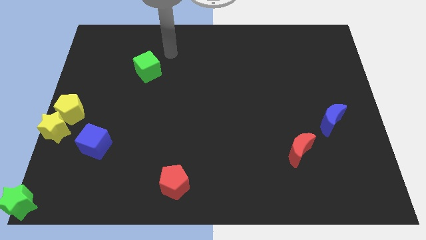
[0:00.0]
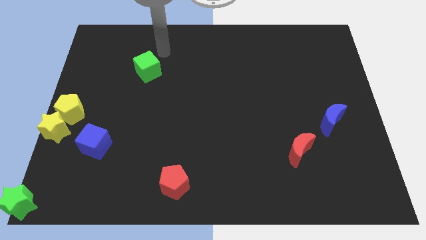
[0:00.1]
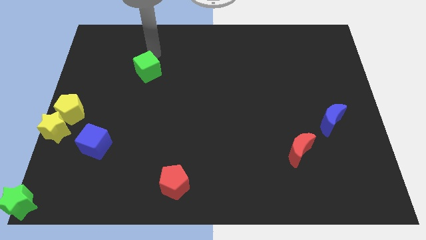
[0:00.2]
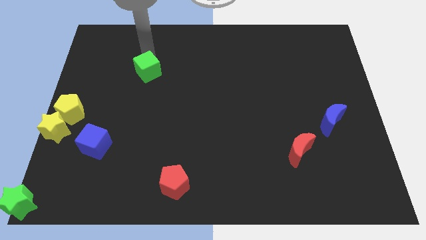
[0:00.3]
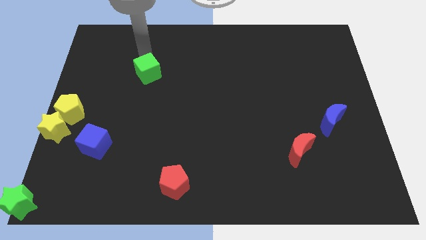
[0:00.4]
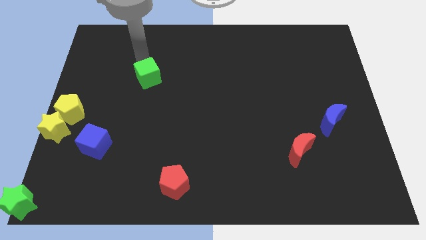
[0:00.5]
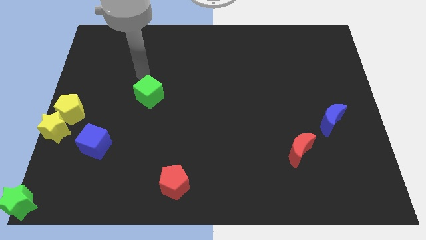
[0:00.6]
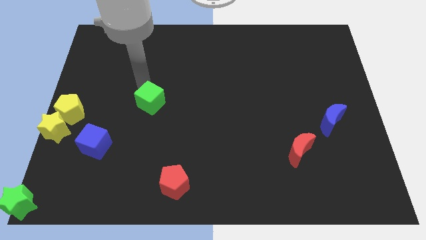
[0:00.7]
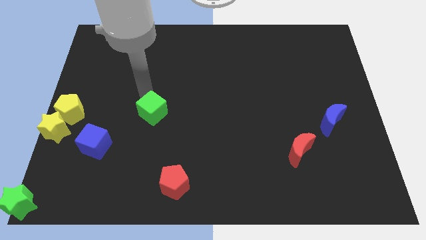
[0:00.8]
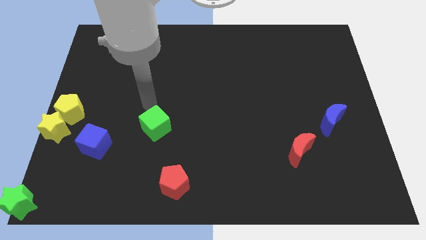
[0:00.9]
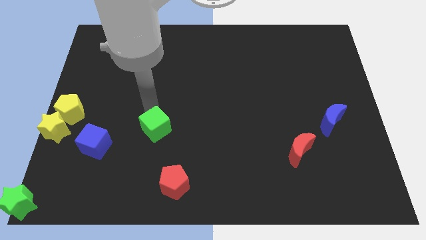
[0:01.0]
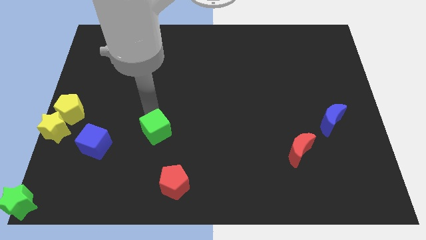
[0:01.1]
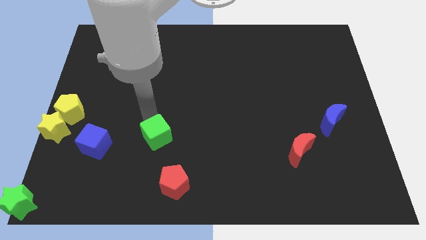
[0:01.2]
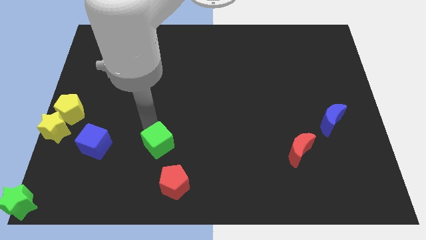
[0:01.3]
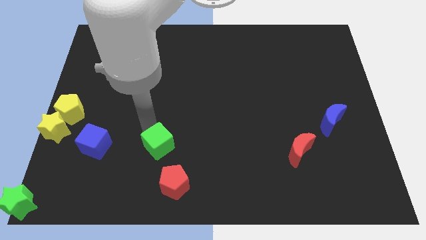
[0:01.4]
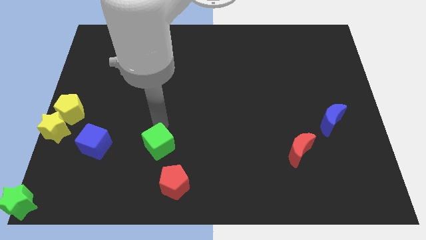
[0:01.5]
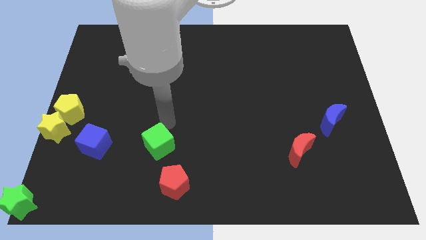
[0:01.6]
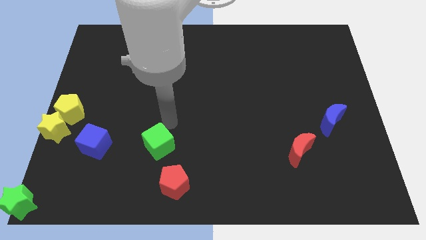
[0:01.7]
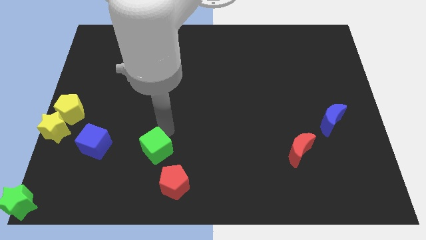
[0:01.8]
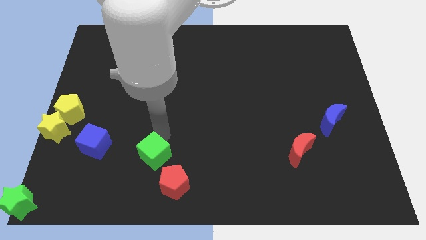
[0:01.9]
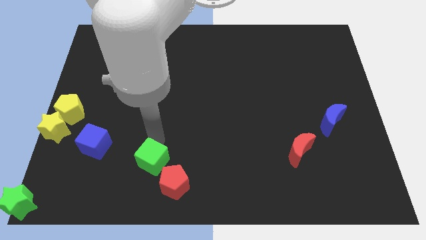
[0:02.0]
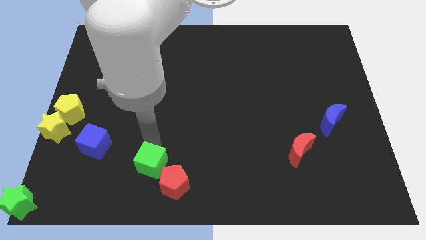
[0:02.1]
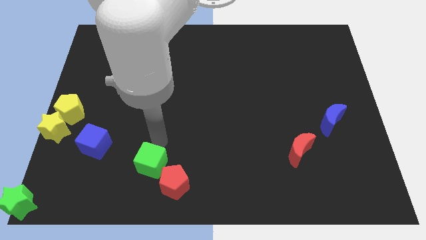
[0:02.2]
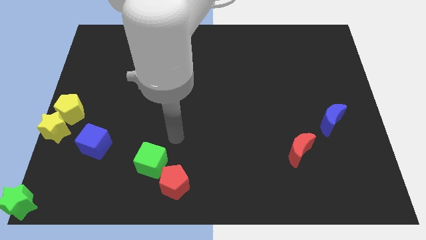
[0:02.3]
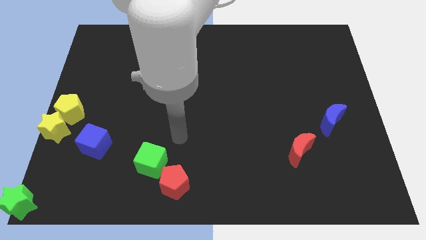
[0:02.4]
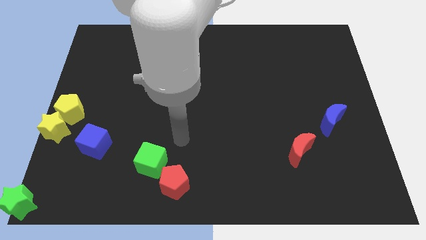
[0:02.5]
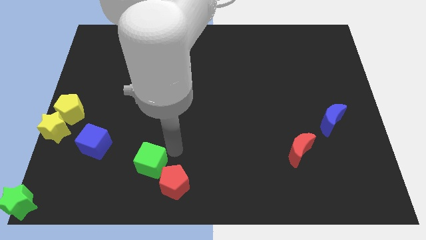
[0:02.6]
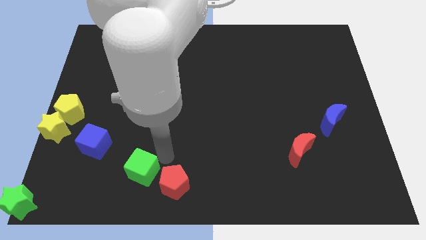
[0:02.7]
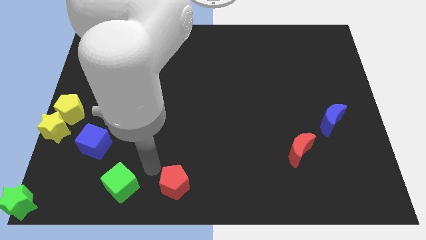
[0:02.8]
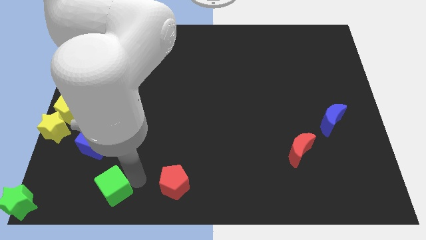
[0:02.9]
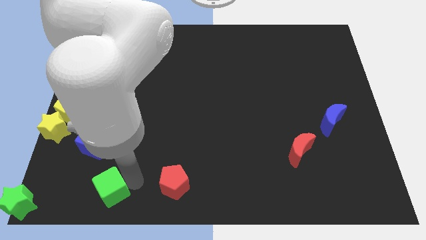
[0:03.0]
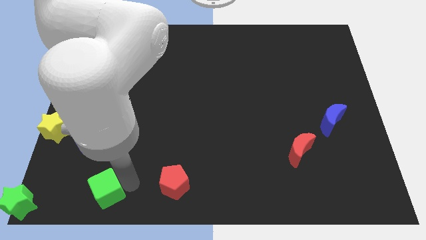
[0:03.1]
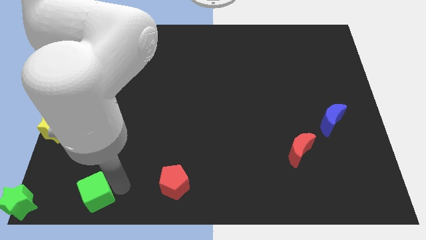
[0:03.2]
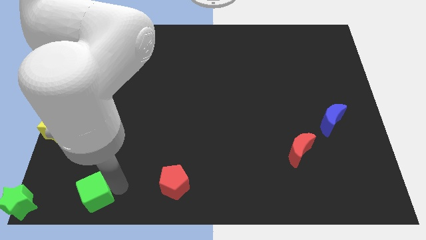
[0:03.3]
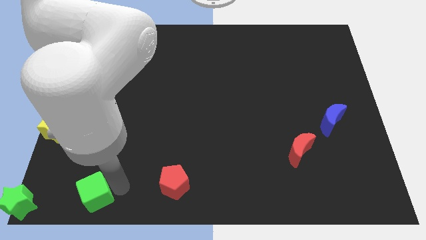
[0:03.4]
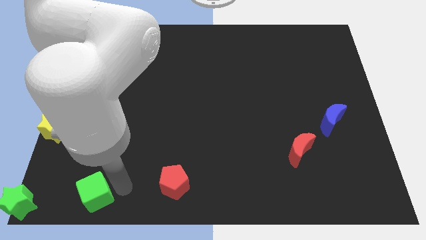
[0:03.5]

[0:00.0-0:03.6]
push the green cube to the right side of the green star

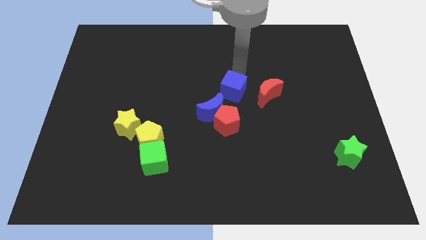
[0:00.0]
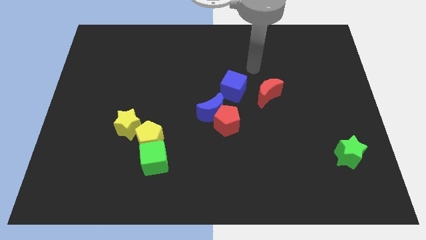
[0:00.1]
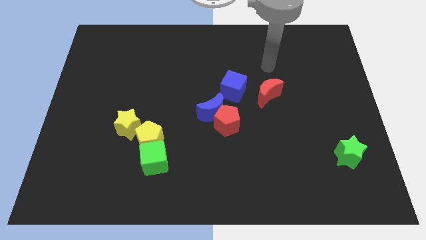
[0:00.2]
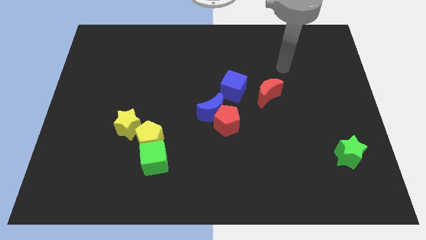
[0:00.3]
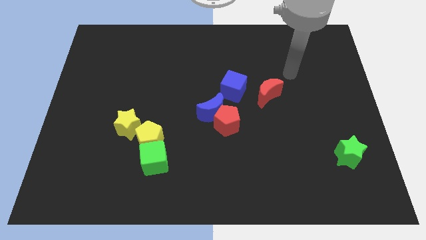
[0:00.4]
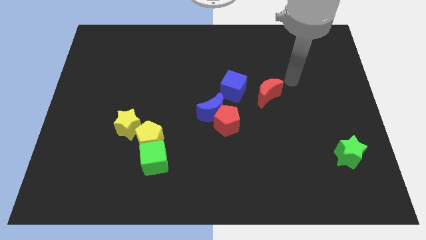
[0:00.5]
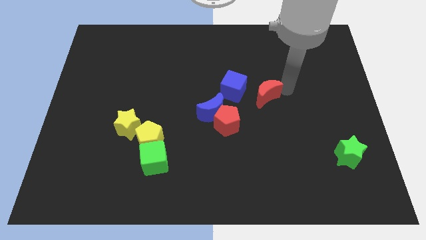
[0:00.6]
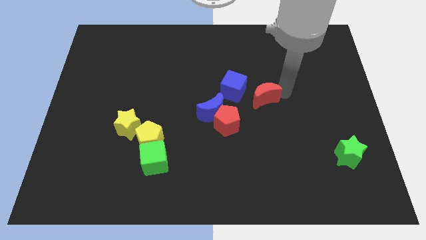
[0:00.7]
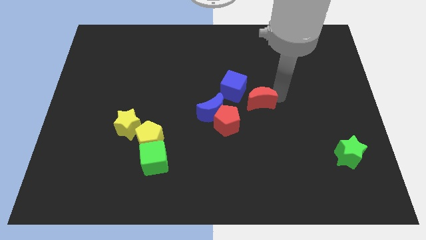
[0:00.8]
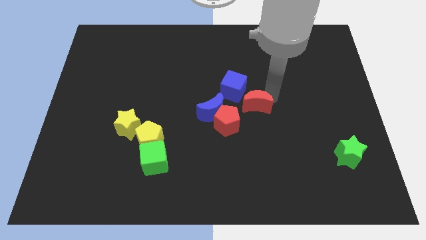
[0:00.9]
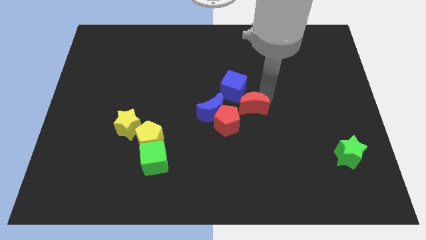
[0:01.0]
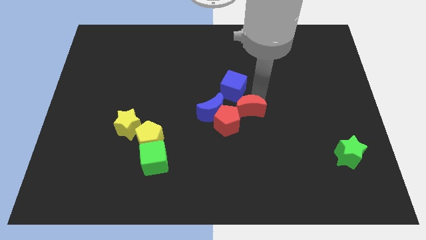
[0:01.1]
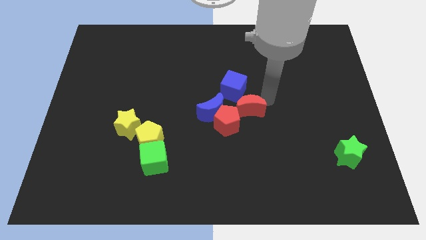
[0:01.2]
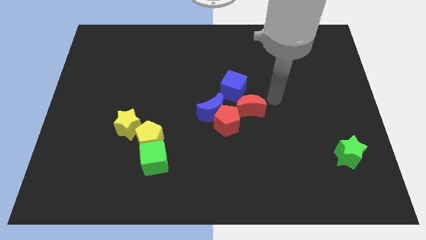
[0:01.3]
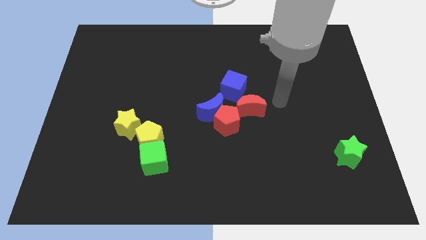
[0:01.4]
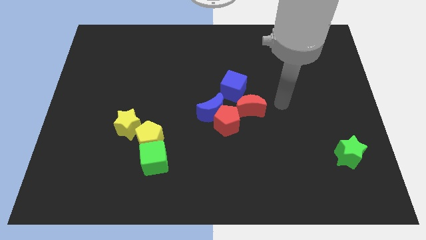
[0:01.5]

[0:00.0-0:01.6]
move the red crescent to the bottom of the blue cube

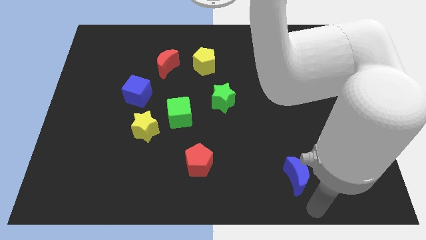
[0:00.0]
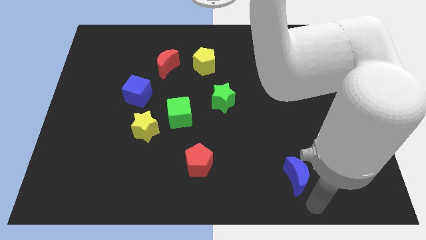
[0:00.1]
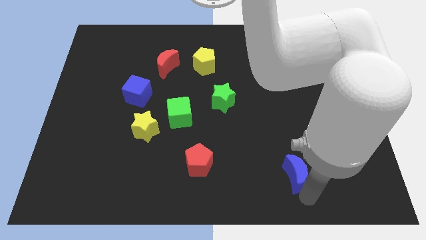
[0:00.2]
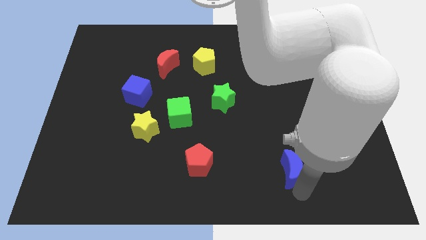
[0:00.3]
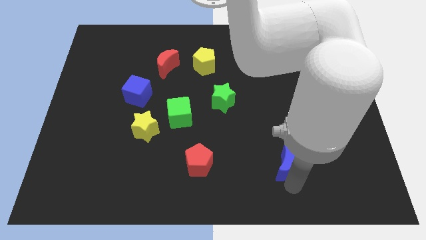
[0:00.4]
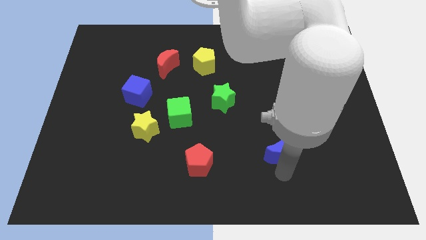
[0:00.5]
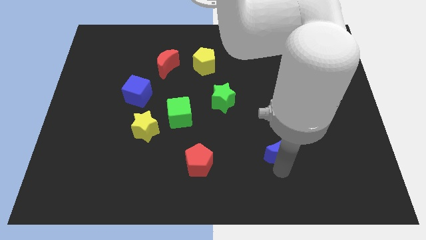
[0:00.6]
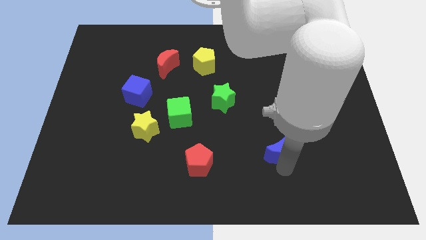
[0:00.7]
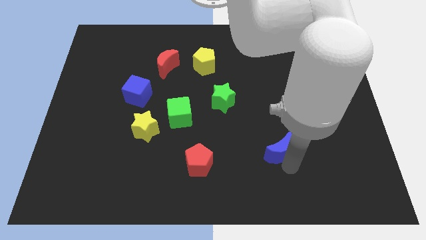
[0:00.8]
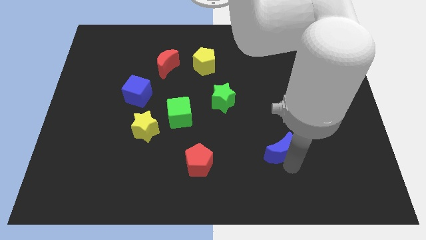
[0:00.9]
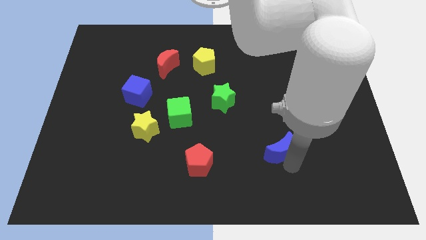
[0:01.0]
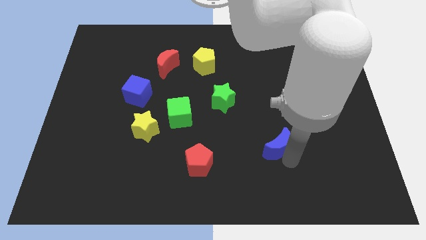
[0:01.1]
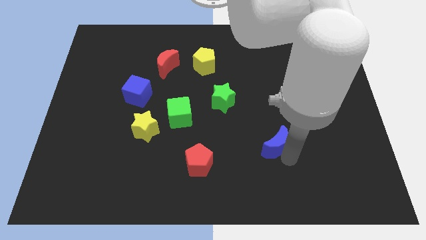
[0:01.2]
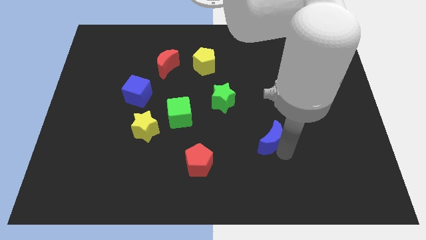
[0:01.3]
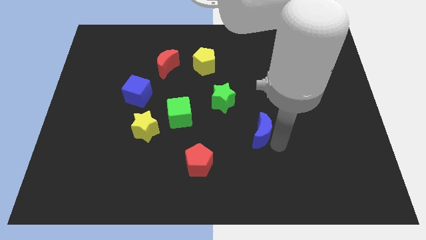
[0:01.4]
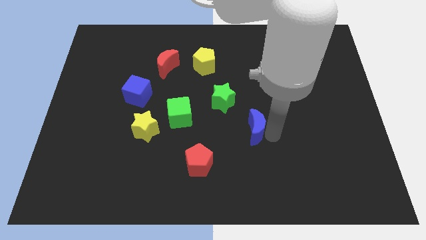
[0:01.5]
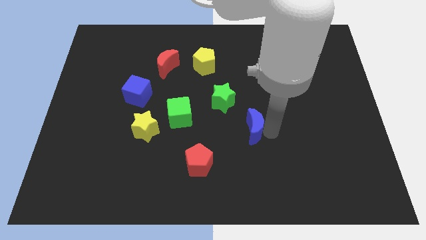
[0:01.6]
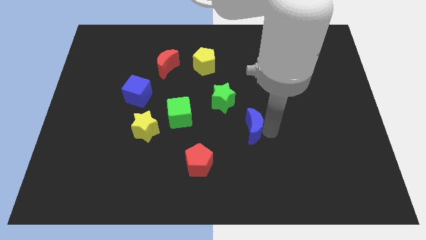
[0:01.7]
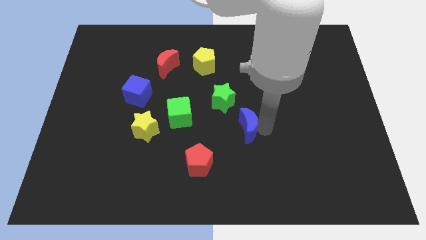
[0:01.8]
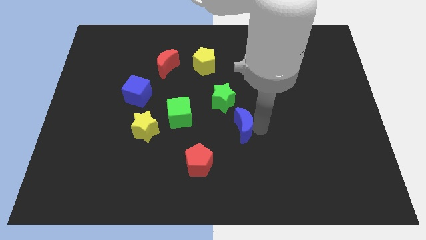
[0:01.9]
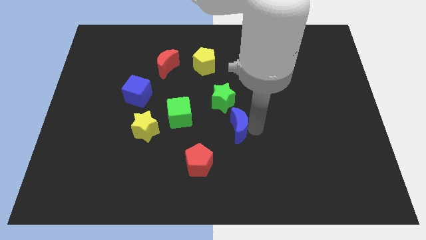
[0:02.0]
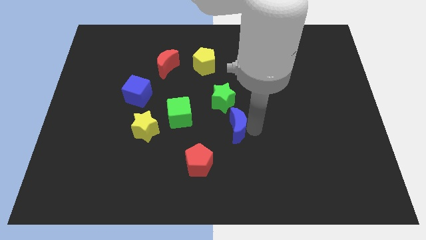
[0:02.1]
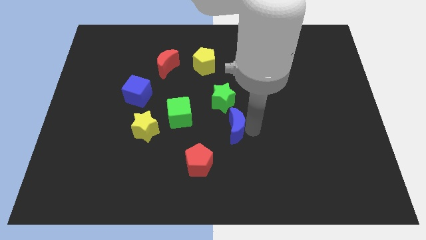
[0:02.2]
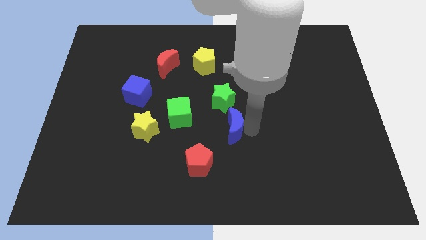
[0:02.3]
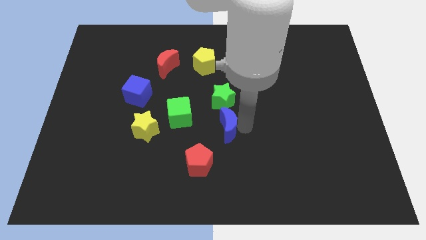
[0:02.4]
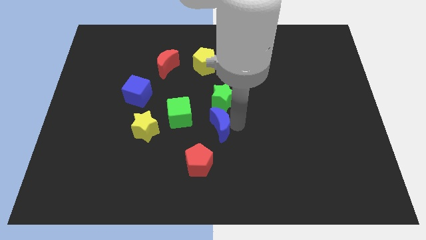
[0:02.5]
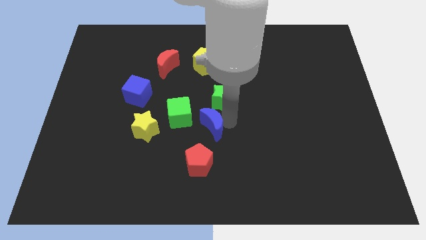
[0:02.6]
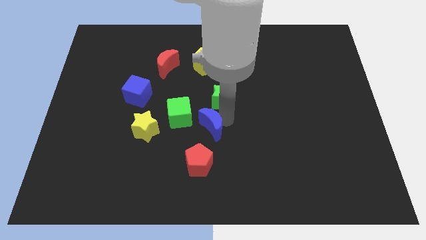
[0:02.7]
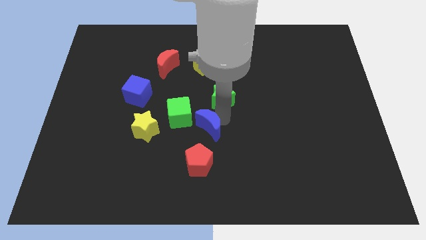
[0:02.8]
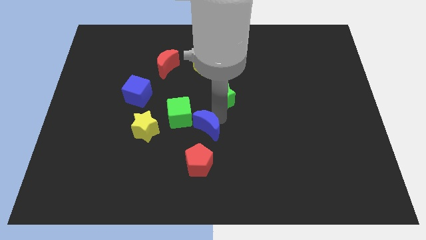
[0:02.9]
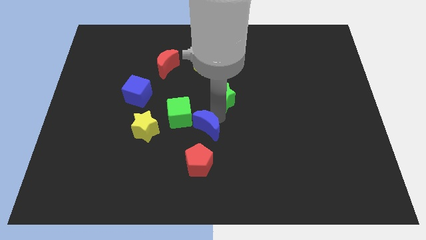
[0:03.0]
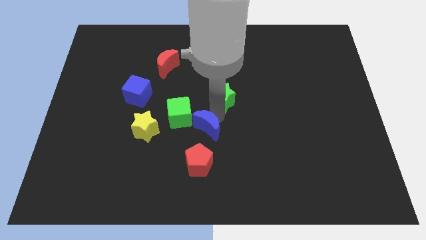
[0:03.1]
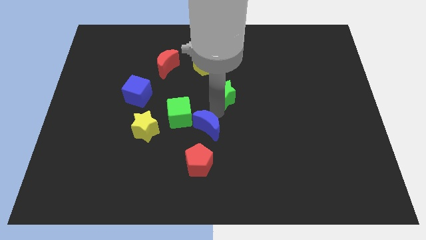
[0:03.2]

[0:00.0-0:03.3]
push blue moon to the bottom right of the green cube

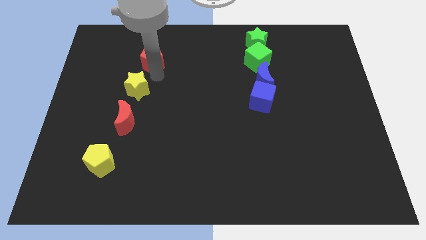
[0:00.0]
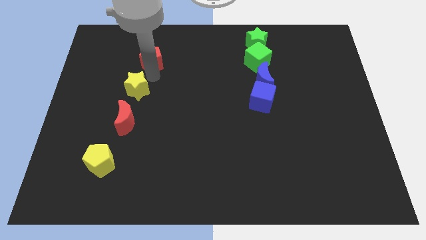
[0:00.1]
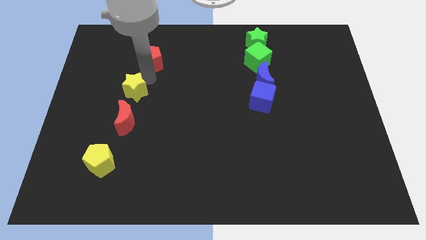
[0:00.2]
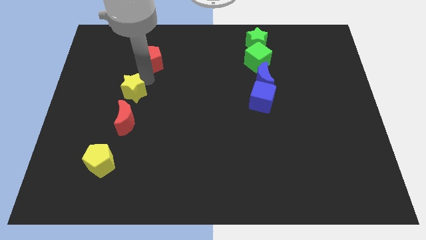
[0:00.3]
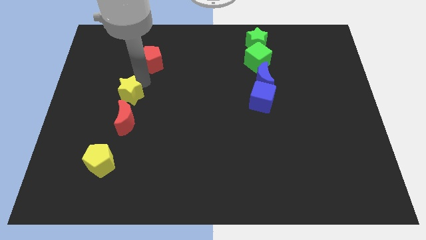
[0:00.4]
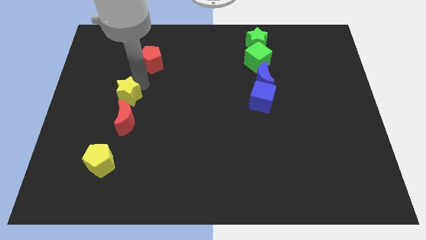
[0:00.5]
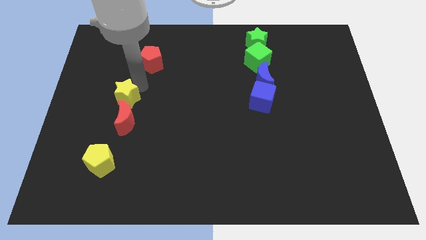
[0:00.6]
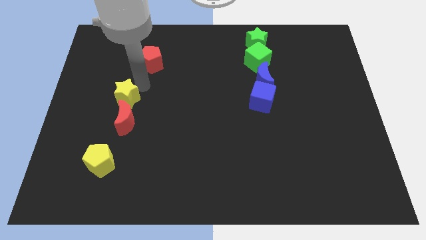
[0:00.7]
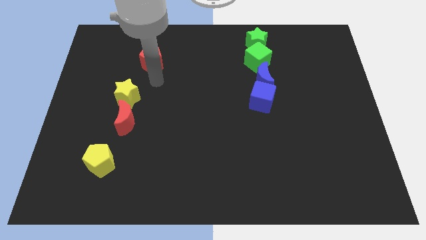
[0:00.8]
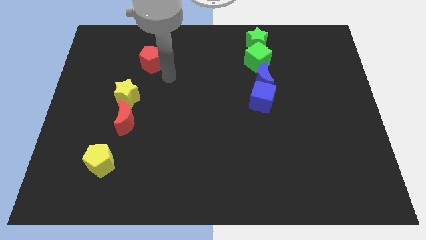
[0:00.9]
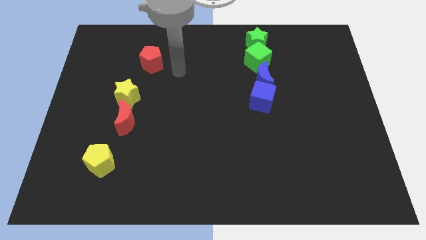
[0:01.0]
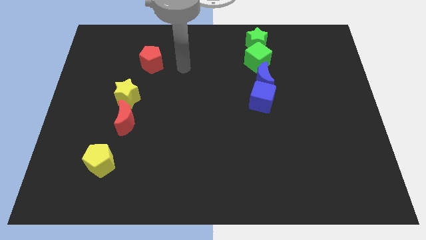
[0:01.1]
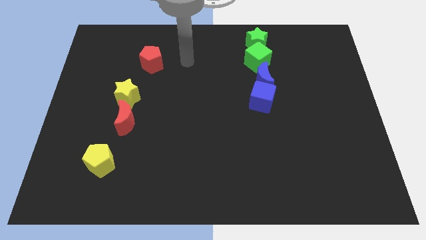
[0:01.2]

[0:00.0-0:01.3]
push the yellow star close to the red moon
